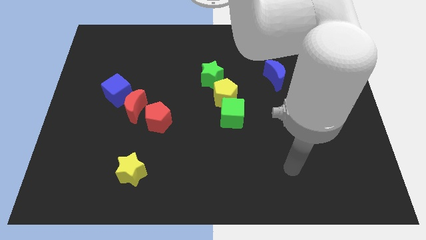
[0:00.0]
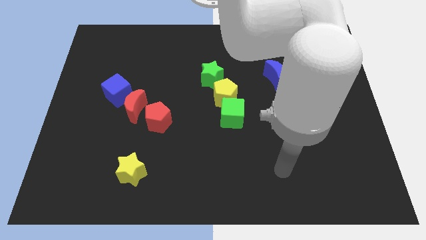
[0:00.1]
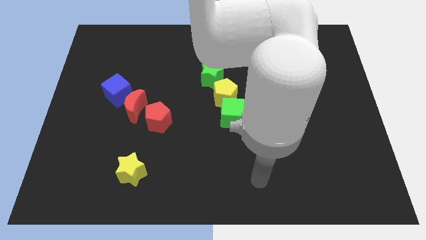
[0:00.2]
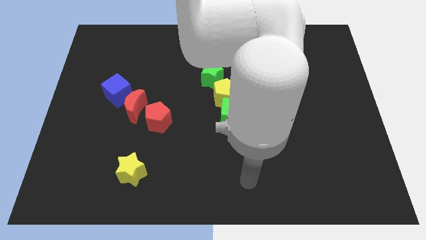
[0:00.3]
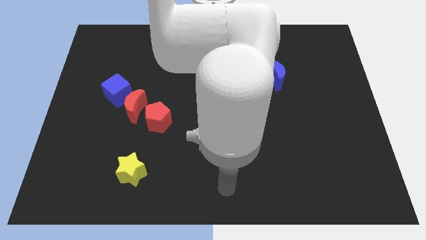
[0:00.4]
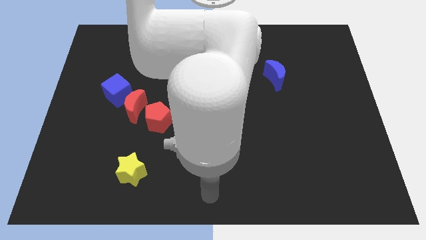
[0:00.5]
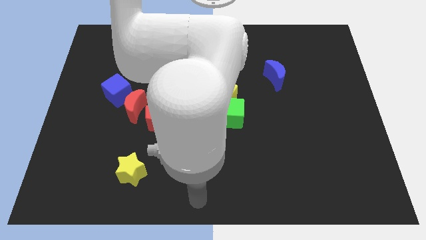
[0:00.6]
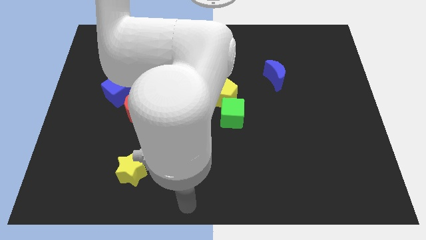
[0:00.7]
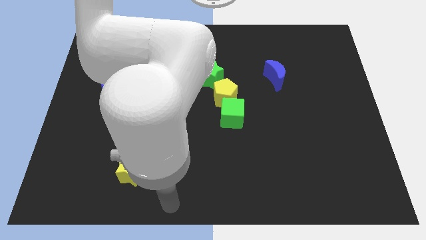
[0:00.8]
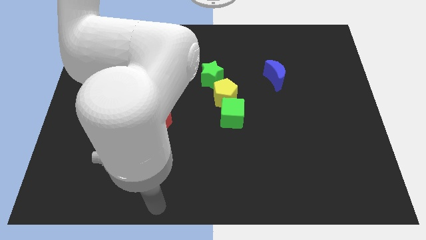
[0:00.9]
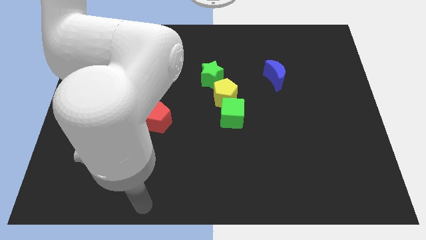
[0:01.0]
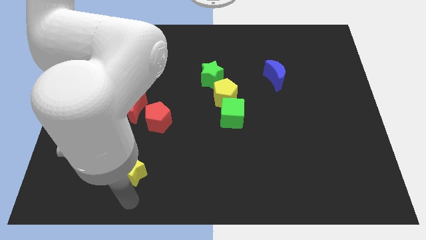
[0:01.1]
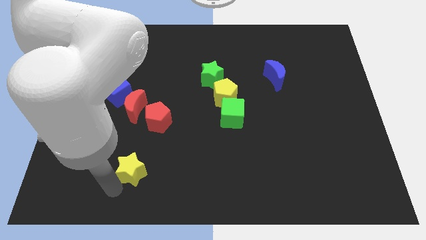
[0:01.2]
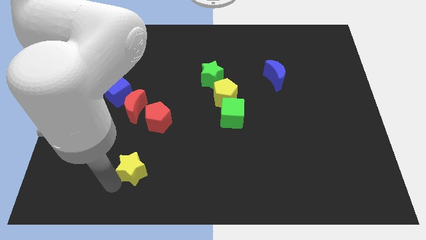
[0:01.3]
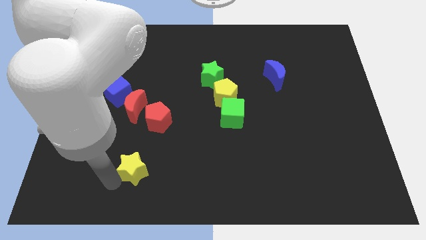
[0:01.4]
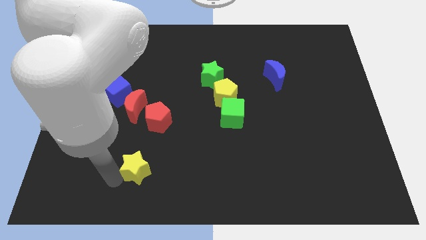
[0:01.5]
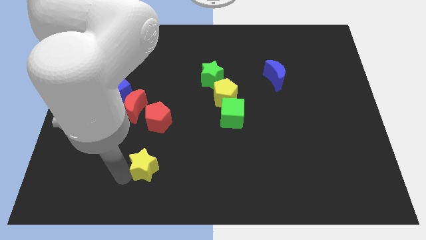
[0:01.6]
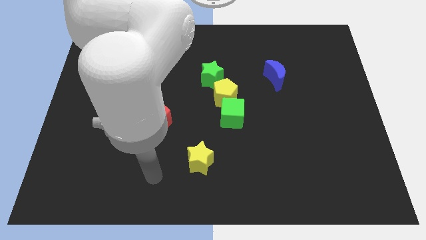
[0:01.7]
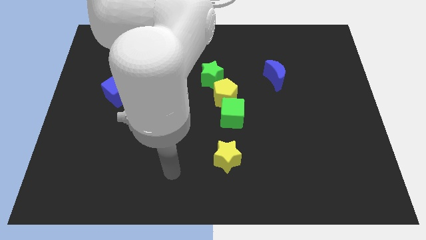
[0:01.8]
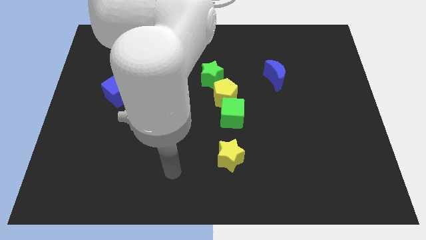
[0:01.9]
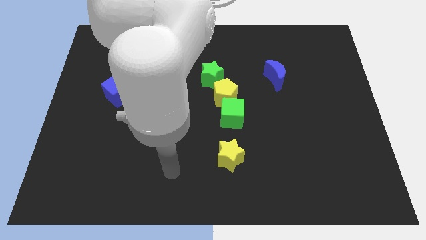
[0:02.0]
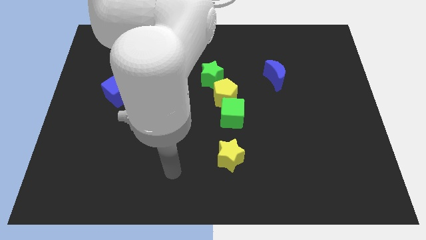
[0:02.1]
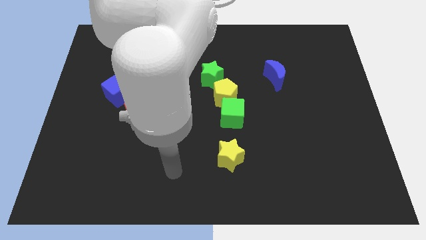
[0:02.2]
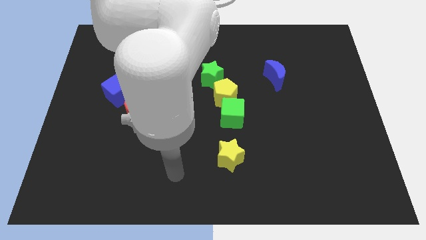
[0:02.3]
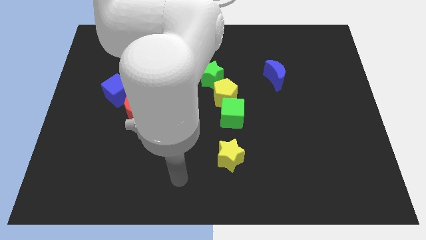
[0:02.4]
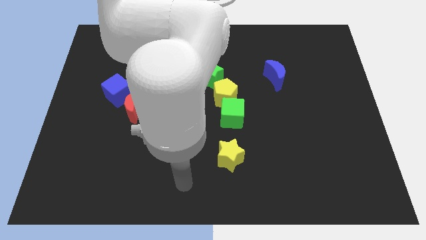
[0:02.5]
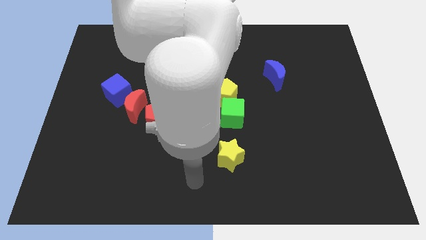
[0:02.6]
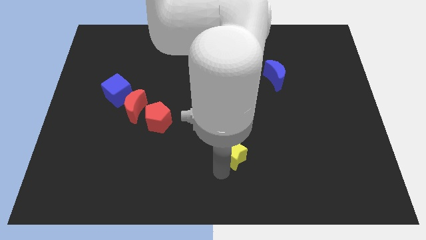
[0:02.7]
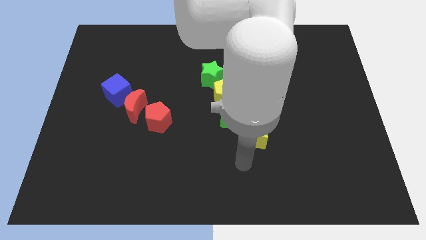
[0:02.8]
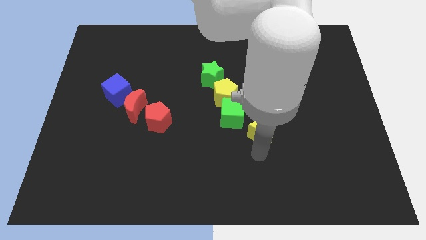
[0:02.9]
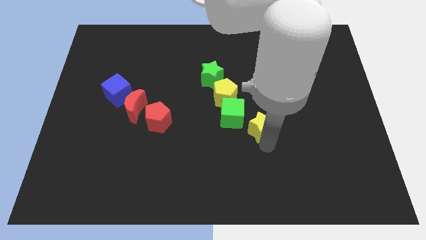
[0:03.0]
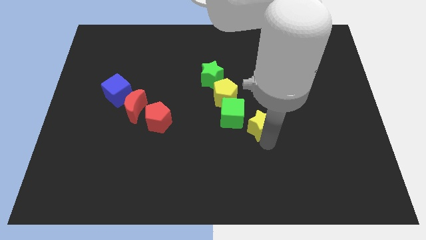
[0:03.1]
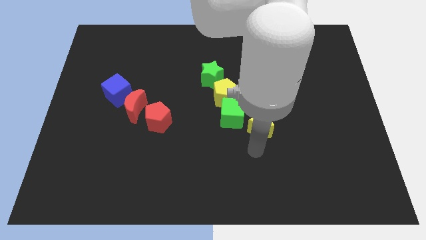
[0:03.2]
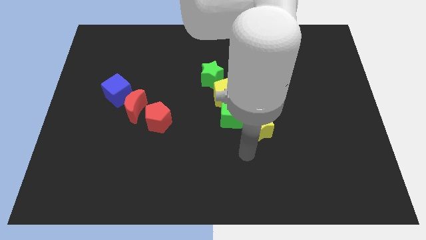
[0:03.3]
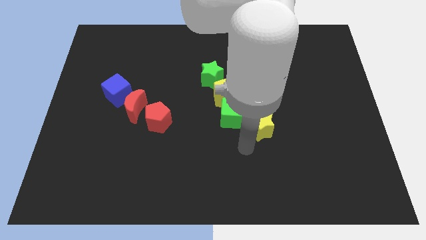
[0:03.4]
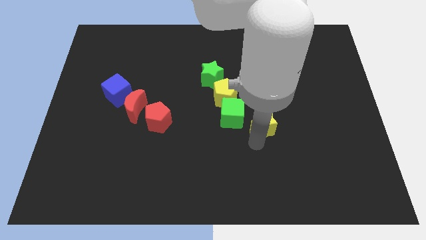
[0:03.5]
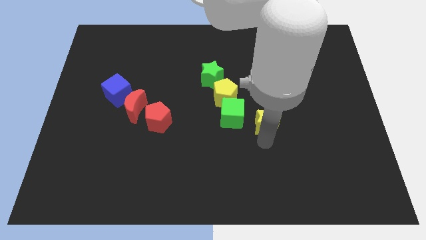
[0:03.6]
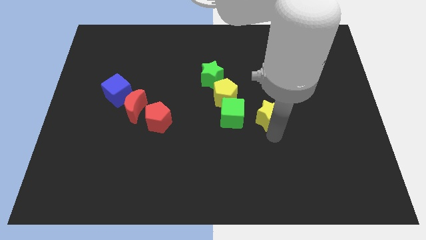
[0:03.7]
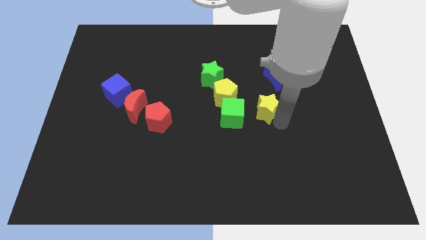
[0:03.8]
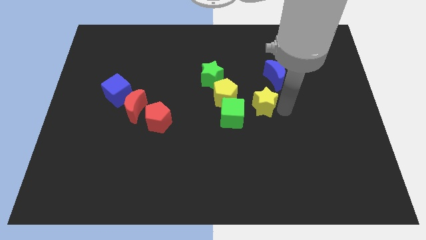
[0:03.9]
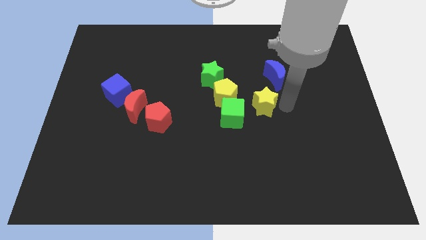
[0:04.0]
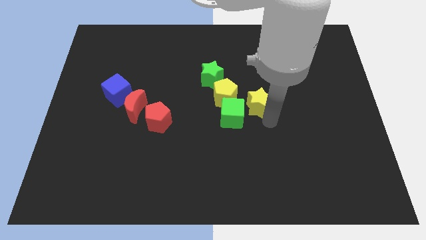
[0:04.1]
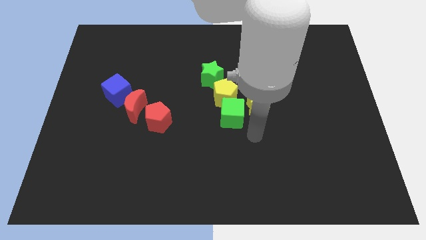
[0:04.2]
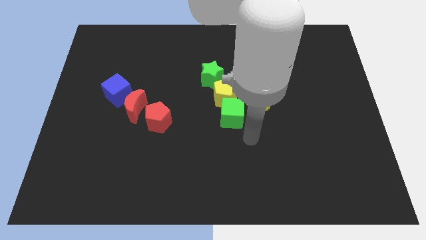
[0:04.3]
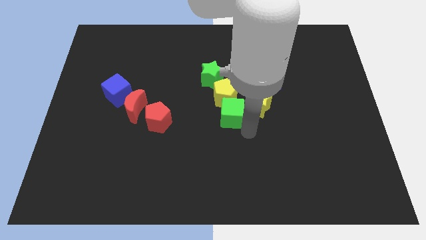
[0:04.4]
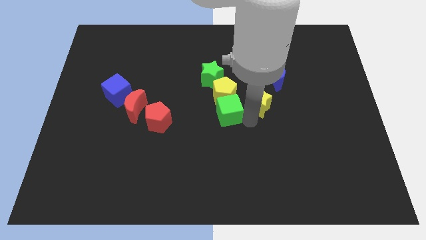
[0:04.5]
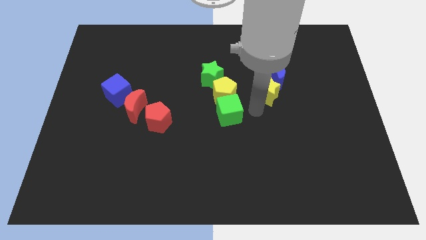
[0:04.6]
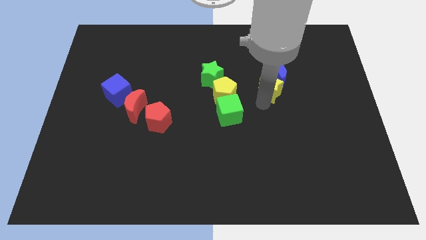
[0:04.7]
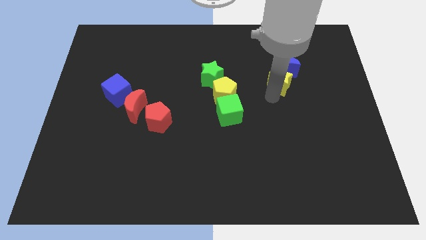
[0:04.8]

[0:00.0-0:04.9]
push the yellow star towards the blue moon

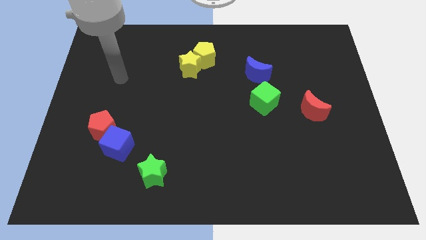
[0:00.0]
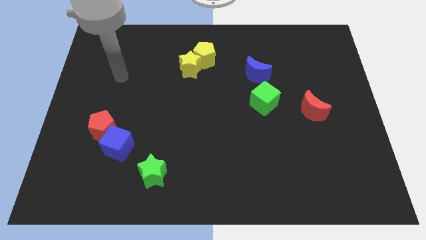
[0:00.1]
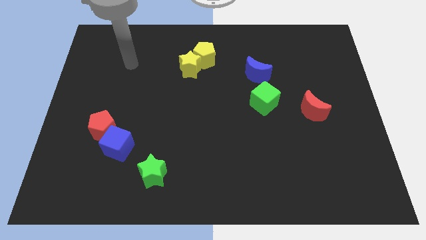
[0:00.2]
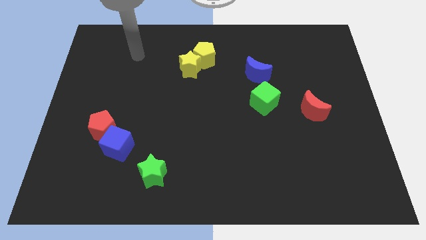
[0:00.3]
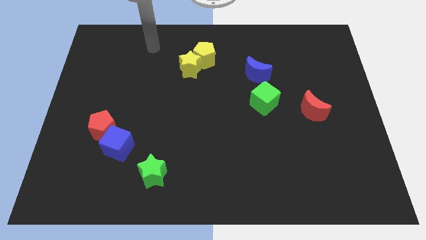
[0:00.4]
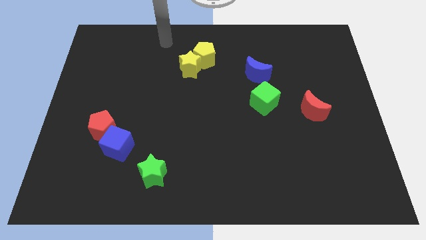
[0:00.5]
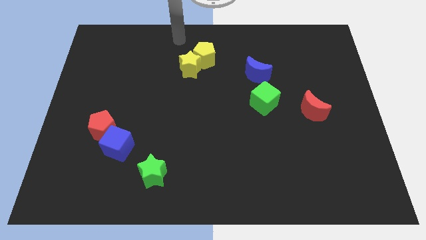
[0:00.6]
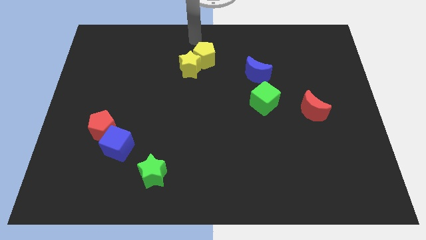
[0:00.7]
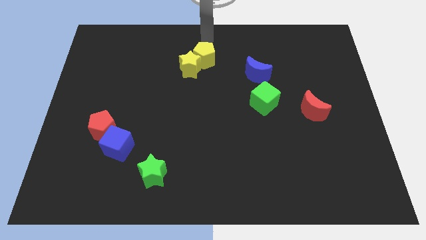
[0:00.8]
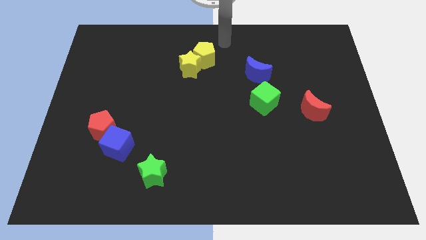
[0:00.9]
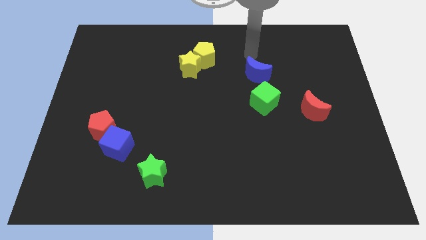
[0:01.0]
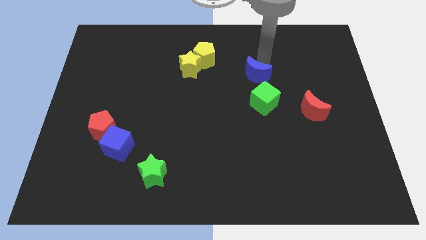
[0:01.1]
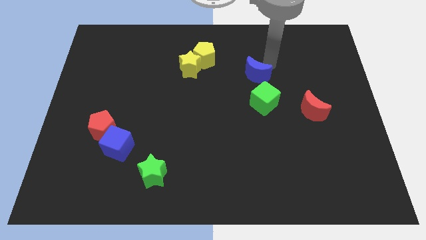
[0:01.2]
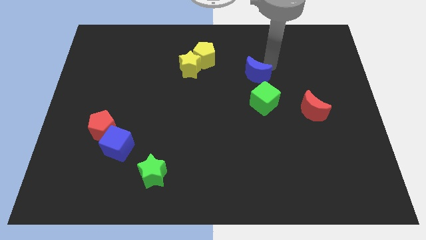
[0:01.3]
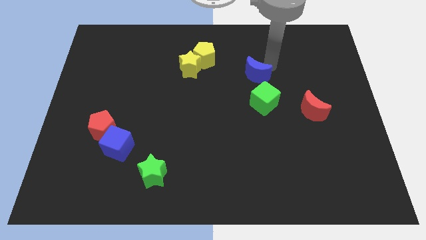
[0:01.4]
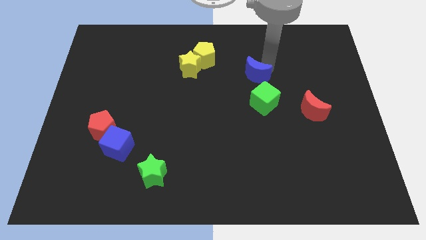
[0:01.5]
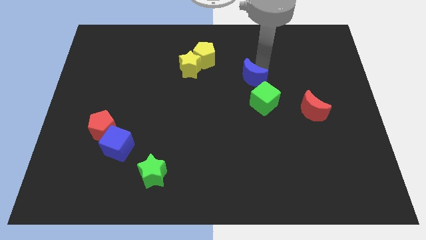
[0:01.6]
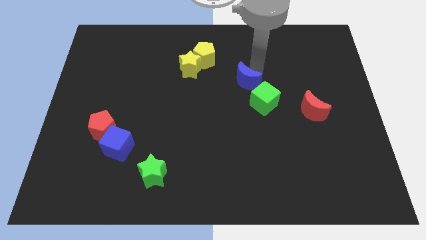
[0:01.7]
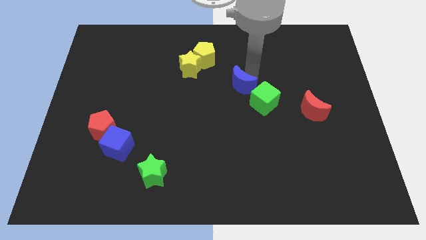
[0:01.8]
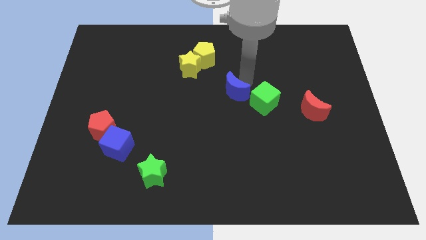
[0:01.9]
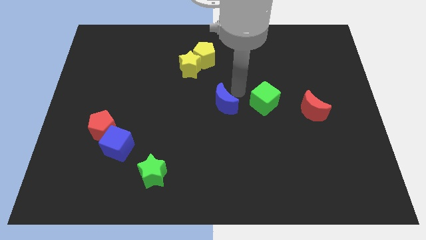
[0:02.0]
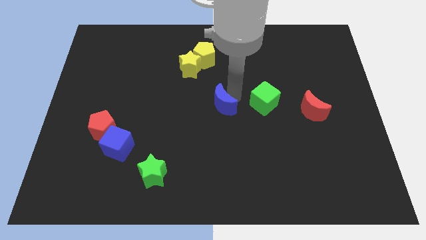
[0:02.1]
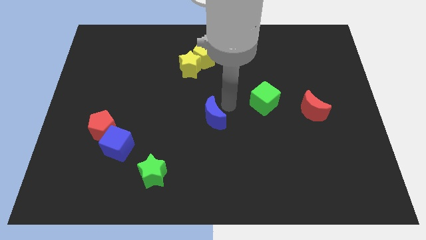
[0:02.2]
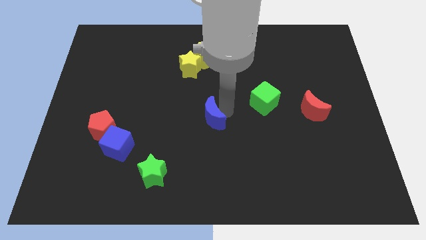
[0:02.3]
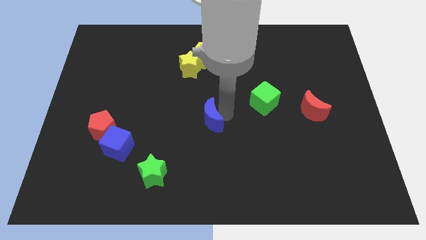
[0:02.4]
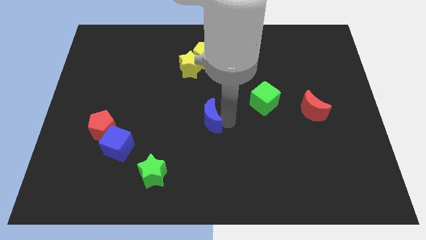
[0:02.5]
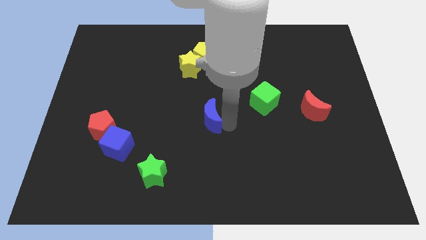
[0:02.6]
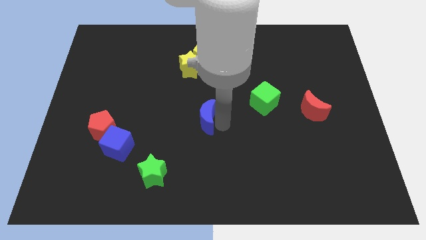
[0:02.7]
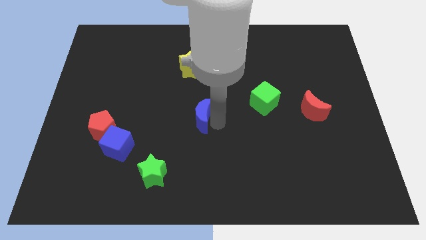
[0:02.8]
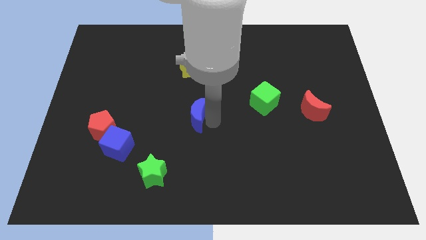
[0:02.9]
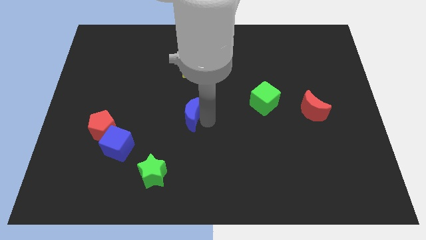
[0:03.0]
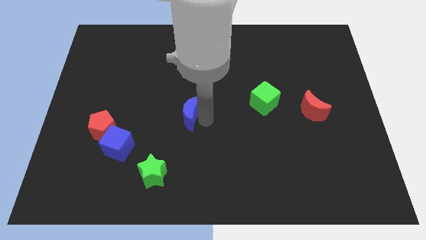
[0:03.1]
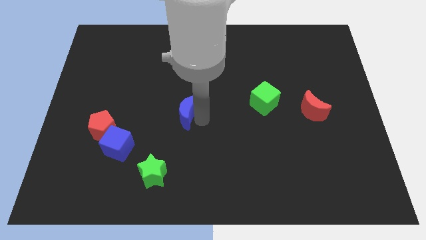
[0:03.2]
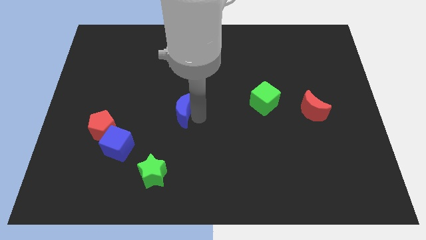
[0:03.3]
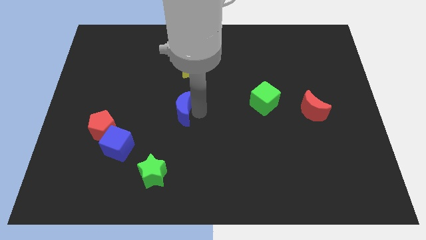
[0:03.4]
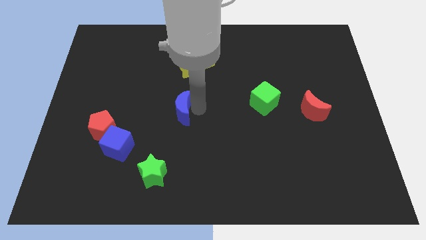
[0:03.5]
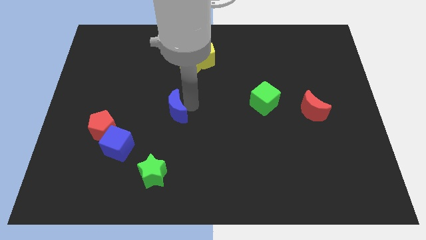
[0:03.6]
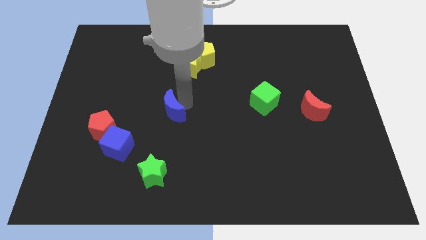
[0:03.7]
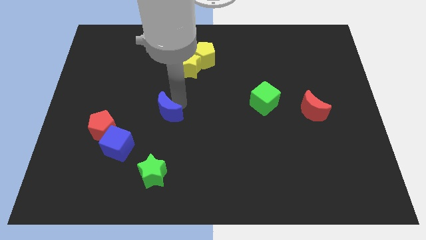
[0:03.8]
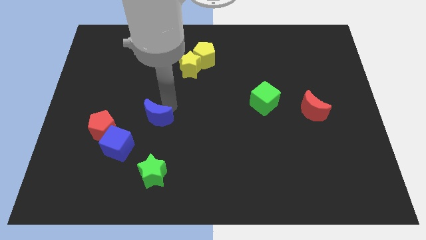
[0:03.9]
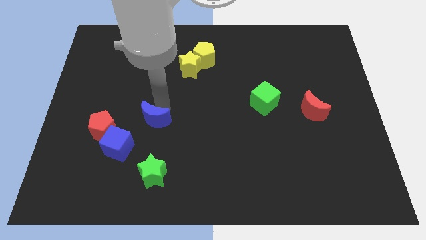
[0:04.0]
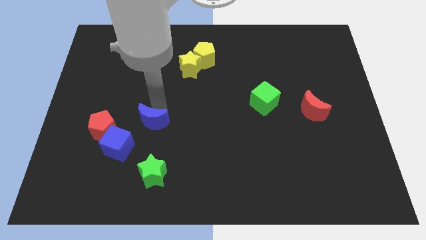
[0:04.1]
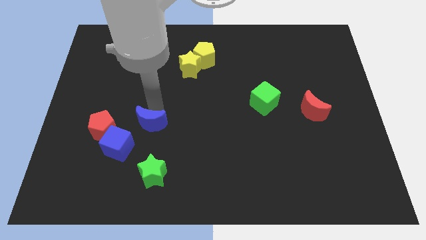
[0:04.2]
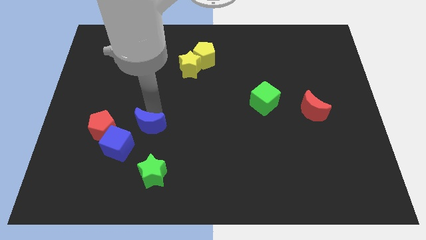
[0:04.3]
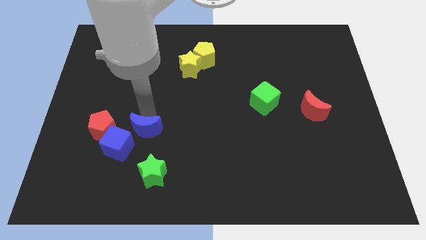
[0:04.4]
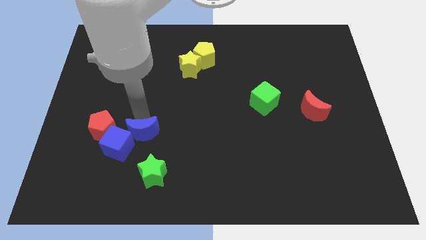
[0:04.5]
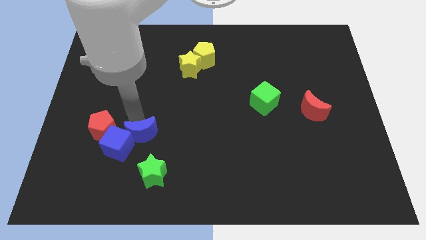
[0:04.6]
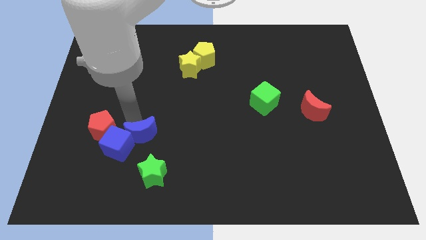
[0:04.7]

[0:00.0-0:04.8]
push the blue moon towards the blue cube
